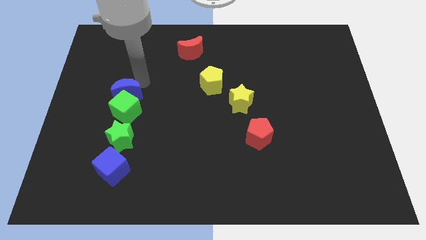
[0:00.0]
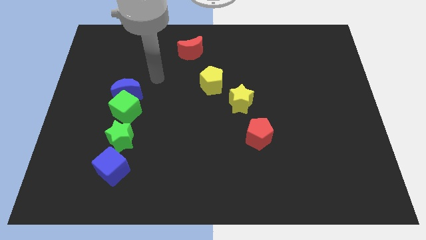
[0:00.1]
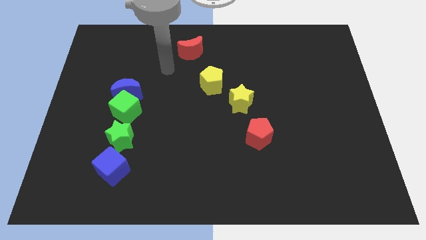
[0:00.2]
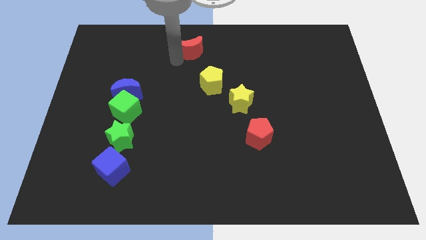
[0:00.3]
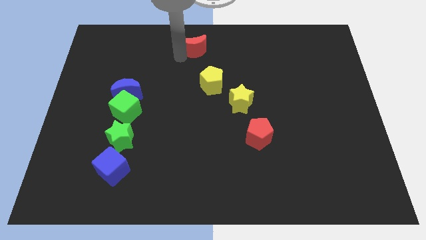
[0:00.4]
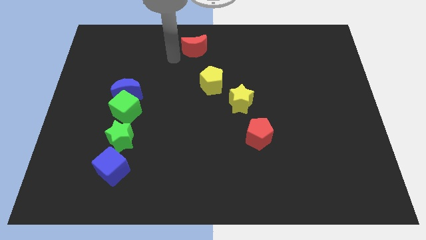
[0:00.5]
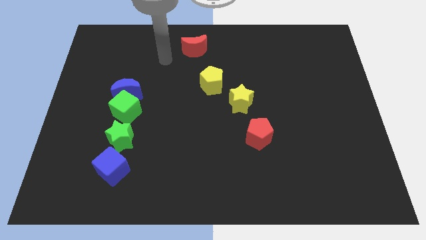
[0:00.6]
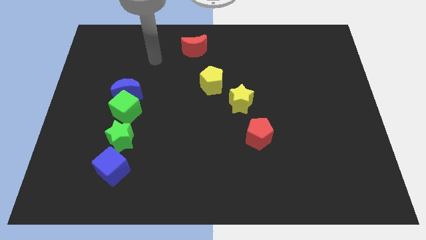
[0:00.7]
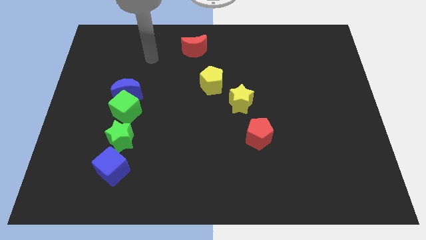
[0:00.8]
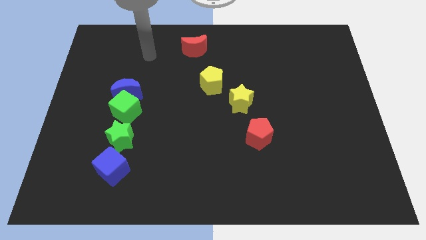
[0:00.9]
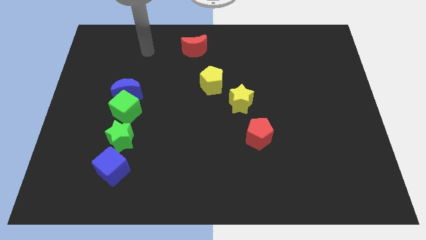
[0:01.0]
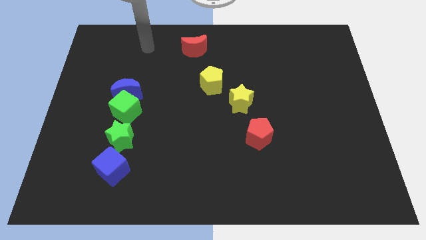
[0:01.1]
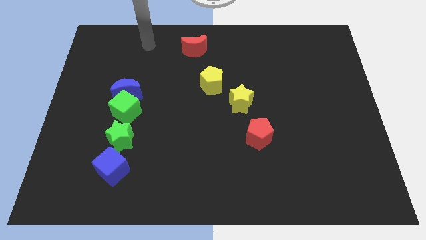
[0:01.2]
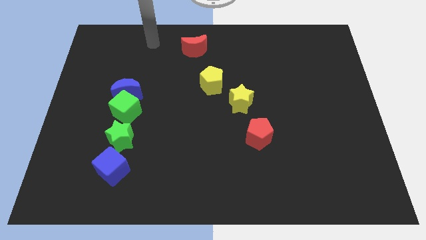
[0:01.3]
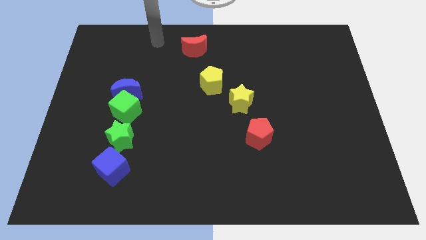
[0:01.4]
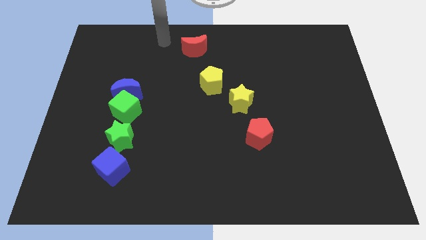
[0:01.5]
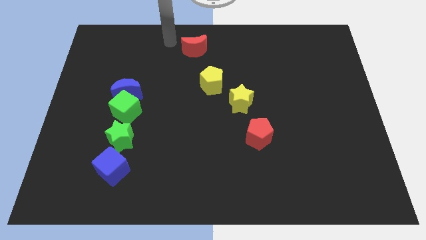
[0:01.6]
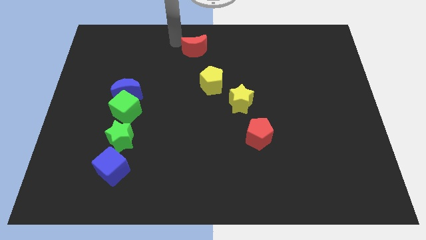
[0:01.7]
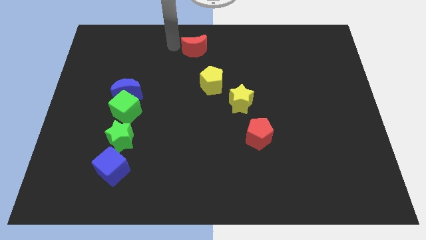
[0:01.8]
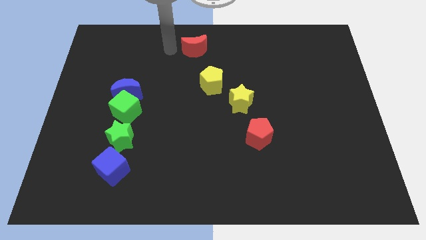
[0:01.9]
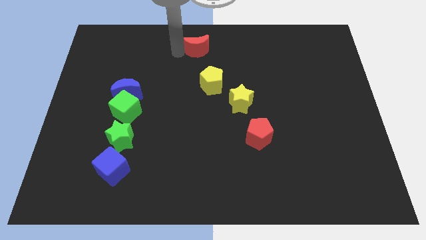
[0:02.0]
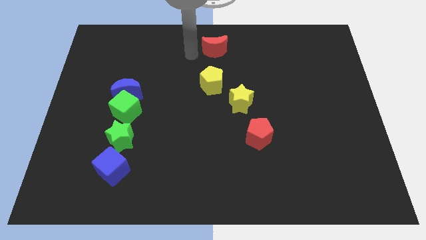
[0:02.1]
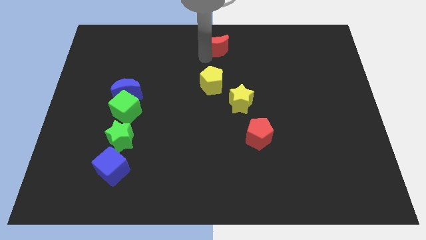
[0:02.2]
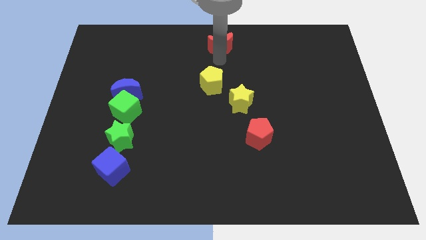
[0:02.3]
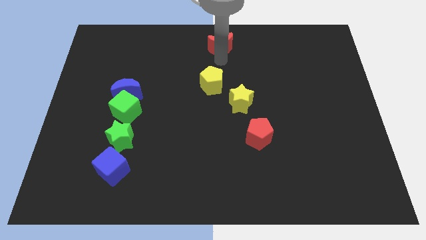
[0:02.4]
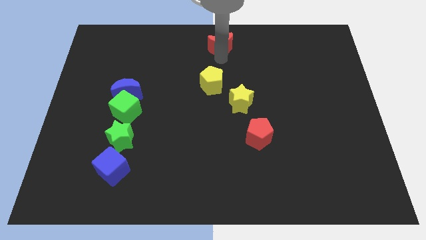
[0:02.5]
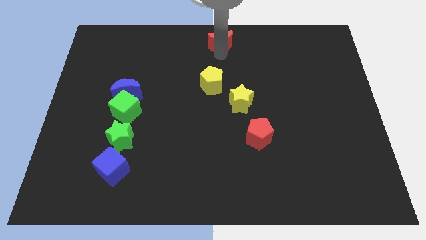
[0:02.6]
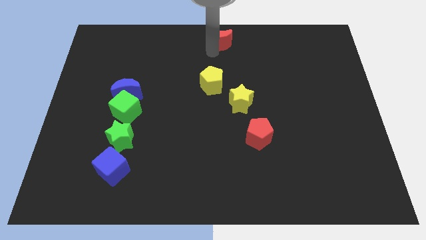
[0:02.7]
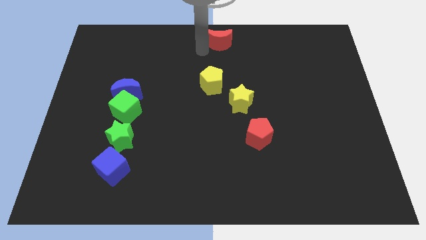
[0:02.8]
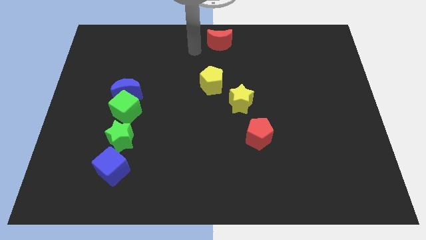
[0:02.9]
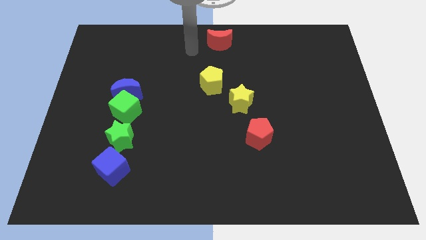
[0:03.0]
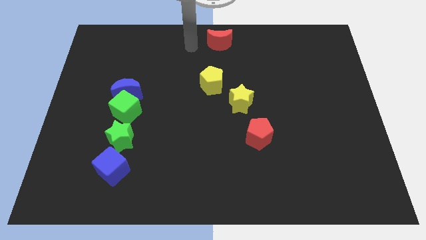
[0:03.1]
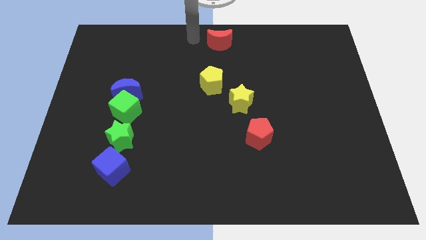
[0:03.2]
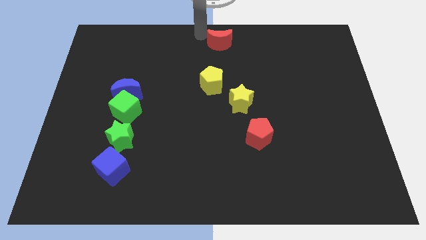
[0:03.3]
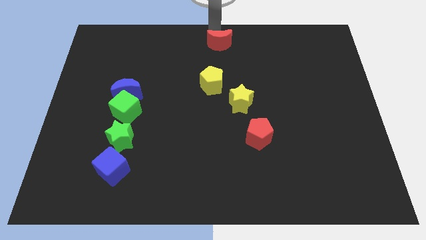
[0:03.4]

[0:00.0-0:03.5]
place the red moon at the top center of the board

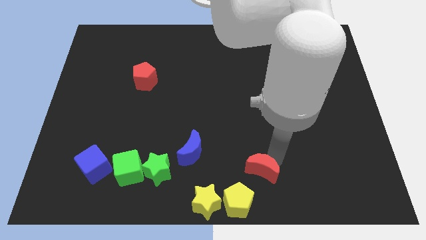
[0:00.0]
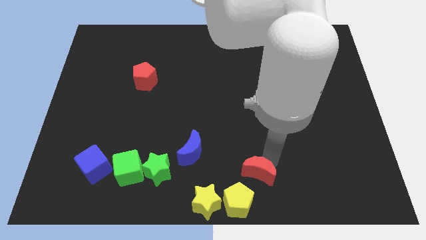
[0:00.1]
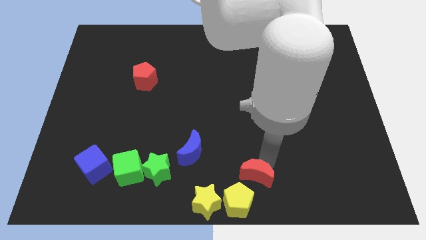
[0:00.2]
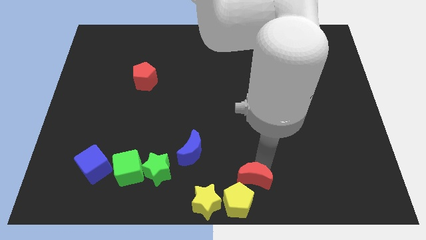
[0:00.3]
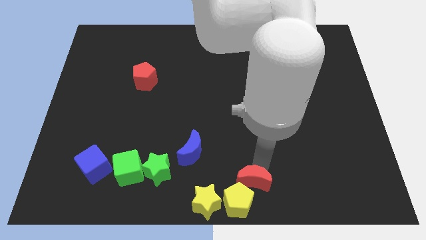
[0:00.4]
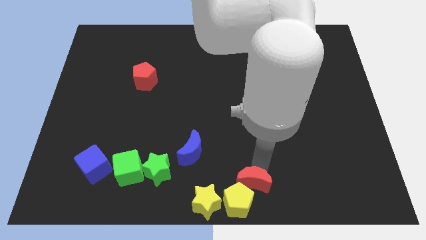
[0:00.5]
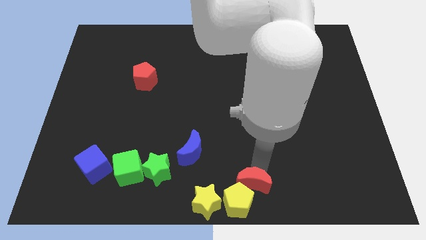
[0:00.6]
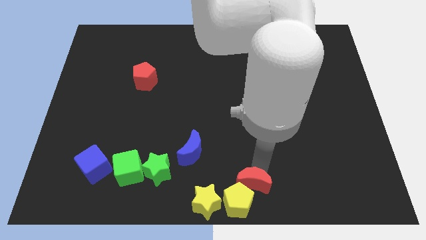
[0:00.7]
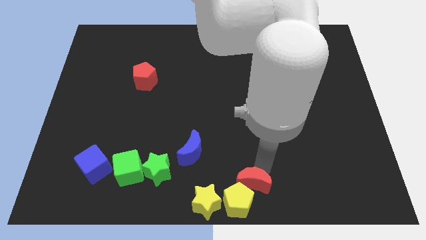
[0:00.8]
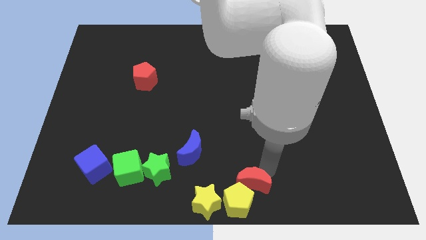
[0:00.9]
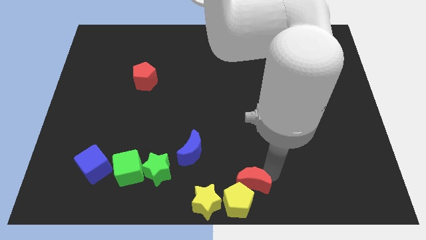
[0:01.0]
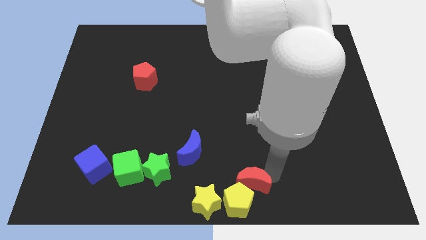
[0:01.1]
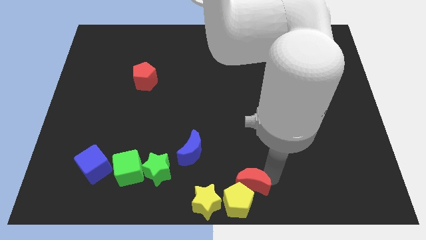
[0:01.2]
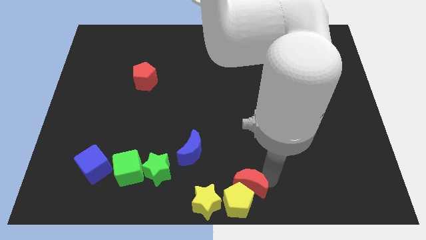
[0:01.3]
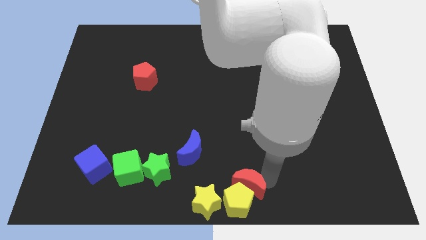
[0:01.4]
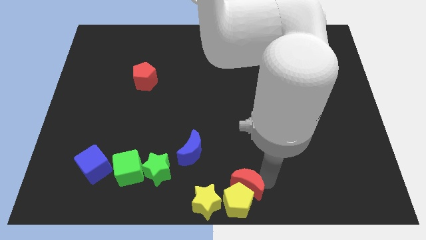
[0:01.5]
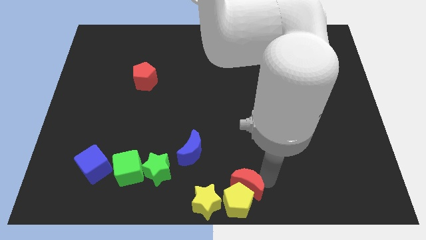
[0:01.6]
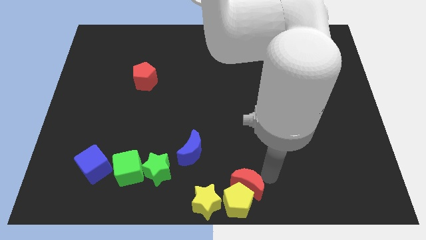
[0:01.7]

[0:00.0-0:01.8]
move the red crescent into the yellow pentagon

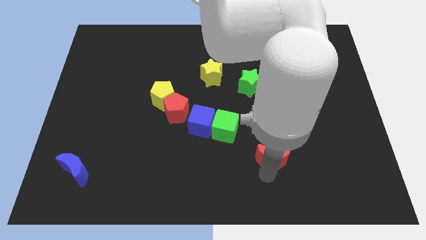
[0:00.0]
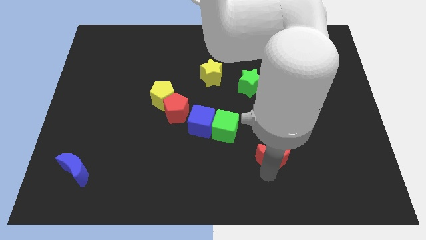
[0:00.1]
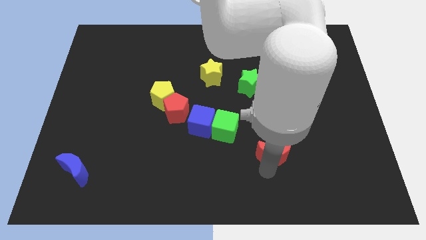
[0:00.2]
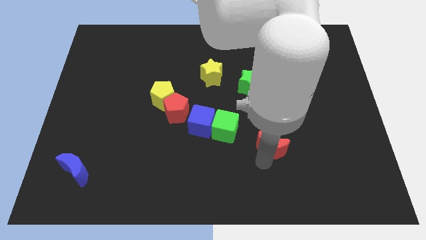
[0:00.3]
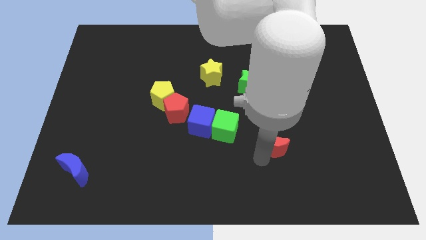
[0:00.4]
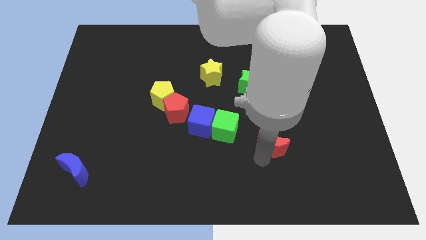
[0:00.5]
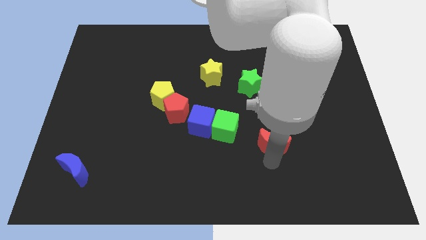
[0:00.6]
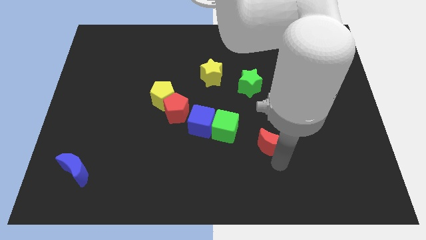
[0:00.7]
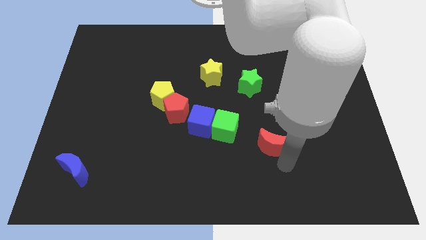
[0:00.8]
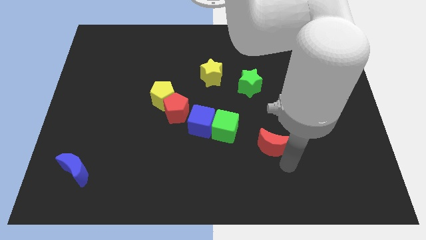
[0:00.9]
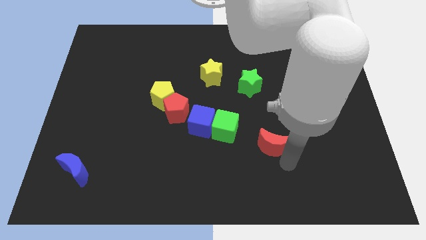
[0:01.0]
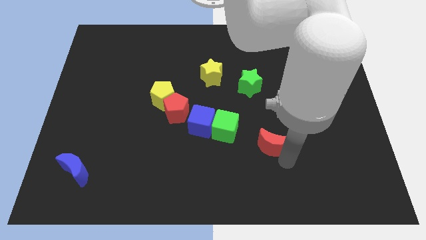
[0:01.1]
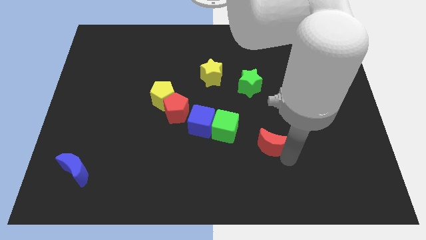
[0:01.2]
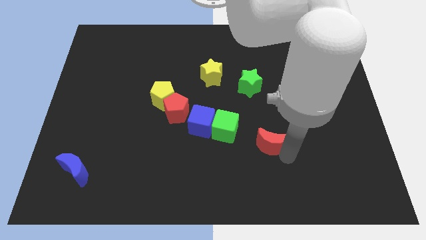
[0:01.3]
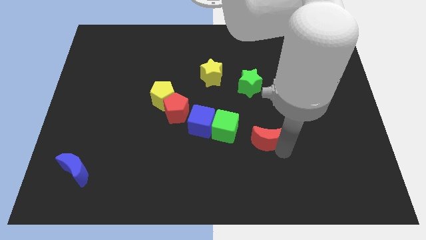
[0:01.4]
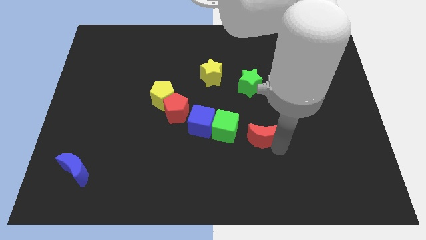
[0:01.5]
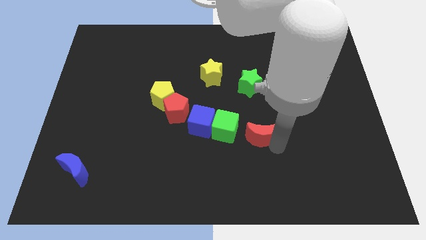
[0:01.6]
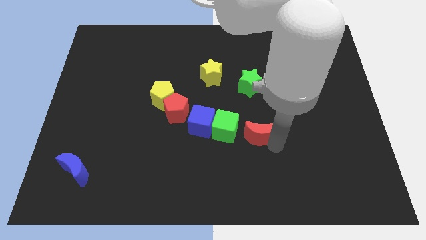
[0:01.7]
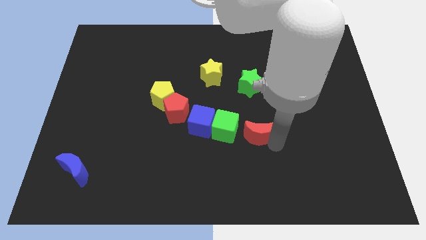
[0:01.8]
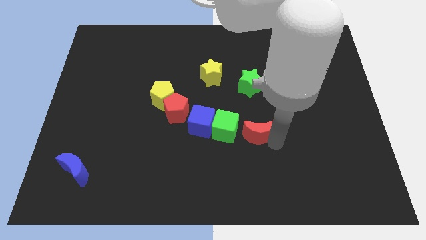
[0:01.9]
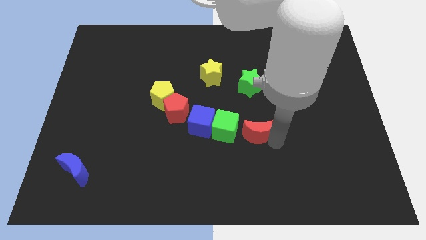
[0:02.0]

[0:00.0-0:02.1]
move red crescent towards the green cube

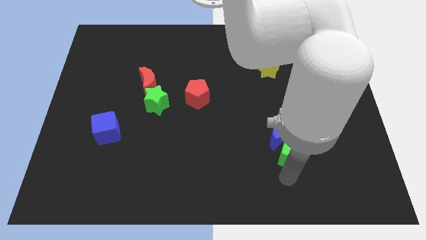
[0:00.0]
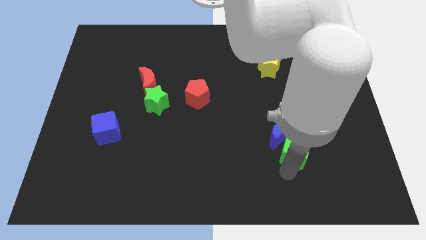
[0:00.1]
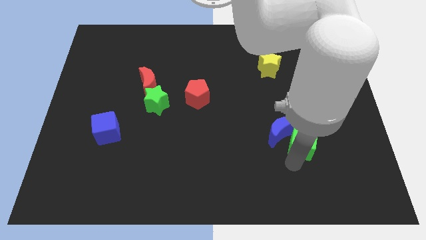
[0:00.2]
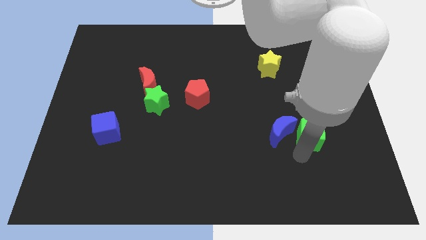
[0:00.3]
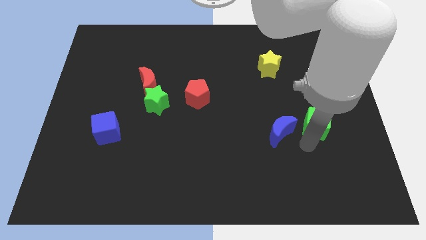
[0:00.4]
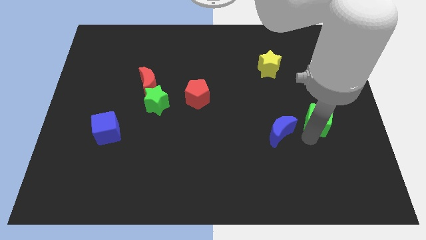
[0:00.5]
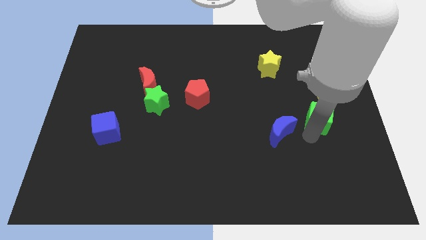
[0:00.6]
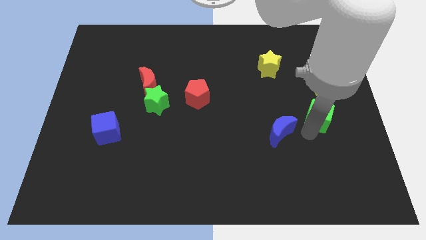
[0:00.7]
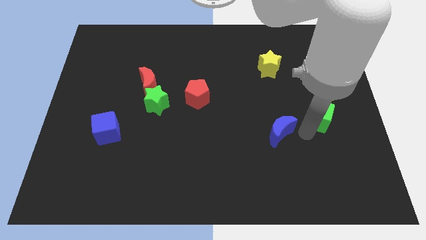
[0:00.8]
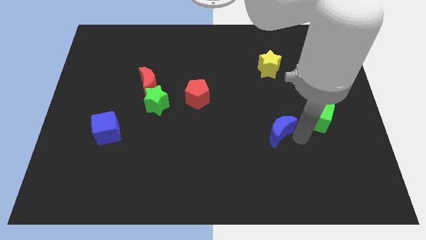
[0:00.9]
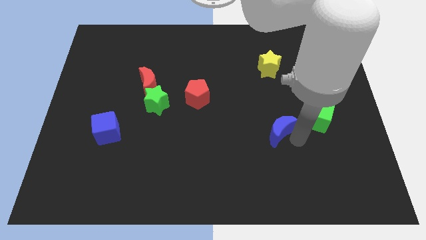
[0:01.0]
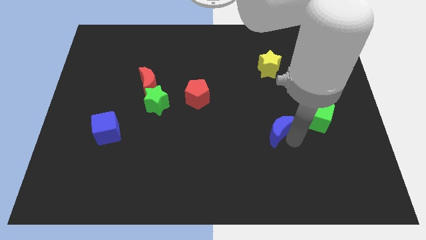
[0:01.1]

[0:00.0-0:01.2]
separate the green cube from blue moon

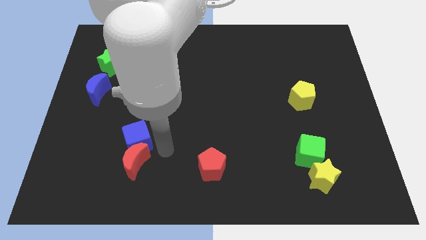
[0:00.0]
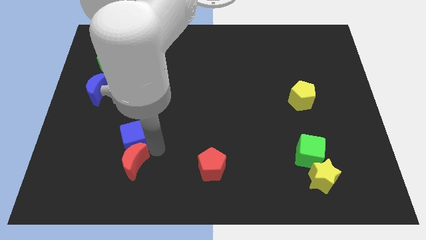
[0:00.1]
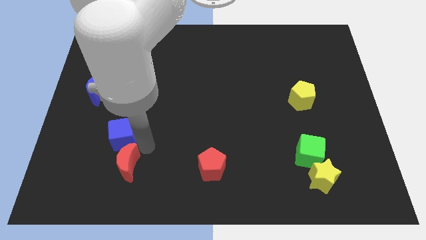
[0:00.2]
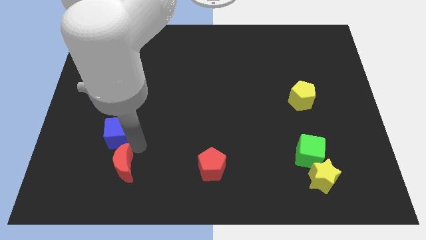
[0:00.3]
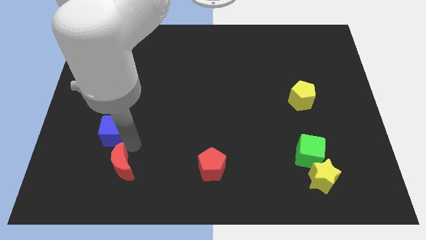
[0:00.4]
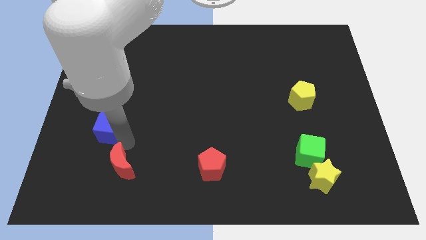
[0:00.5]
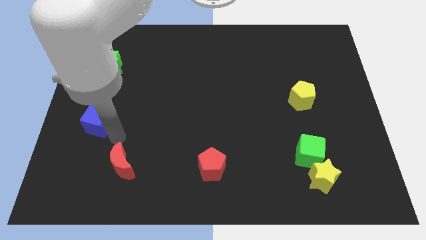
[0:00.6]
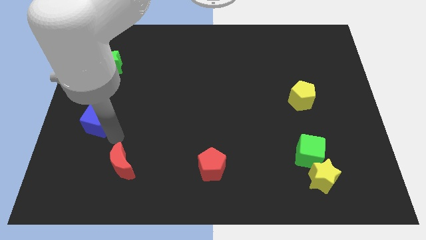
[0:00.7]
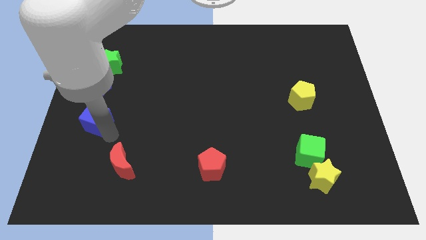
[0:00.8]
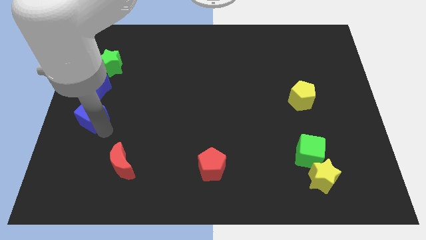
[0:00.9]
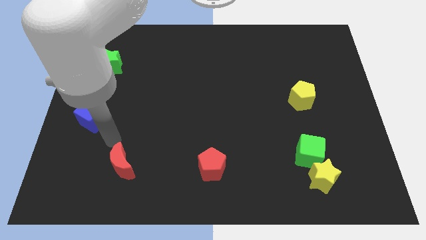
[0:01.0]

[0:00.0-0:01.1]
move the blue cube away from the top side of the red crescent
